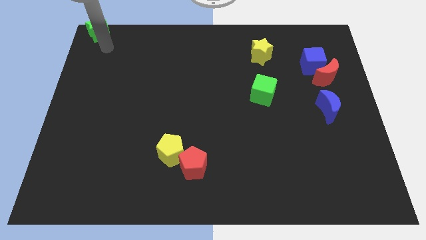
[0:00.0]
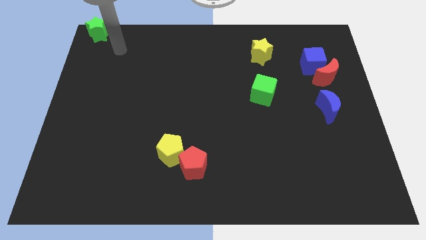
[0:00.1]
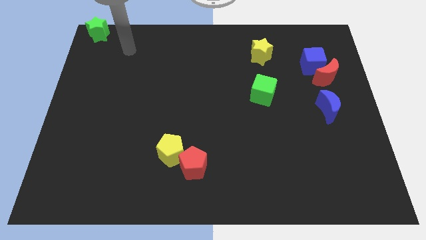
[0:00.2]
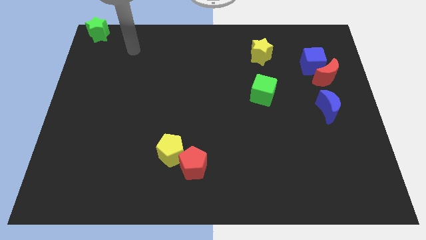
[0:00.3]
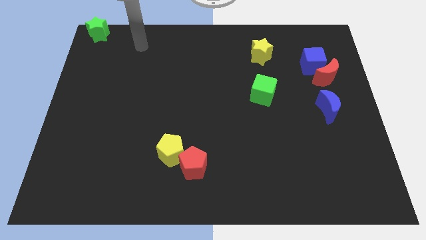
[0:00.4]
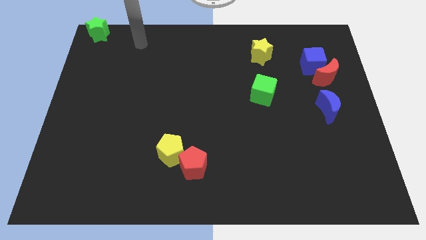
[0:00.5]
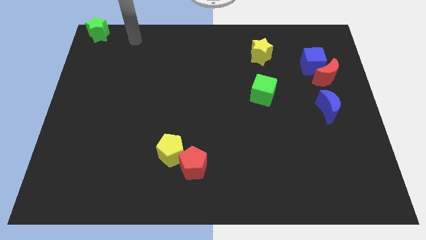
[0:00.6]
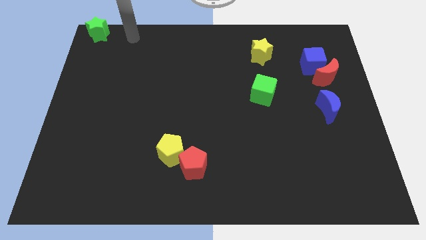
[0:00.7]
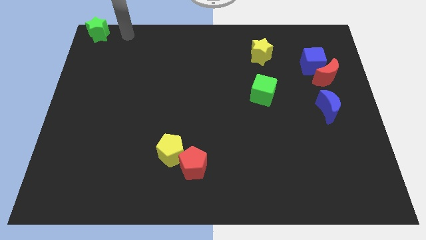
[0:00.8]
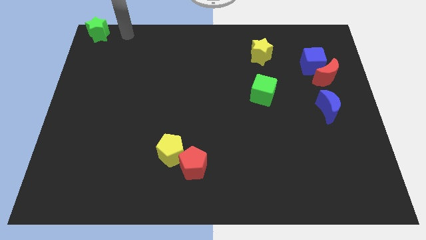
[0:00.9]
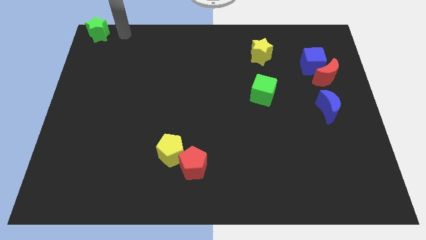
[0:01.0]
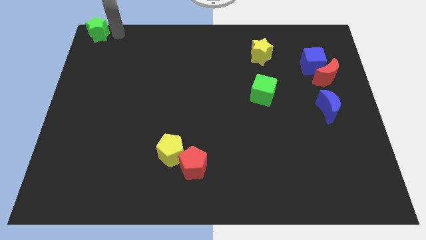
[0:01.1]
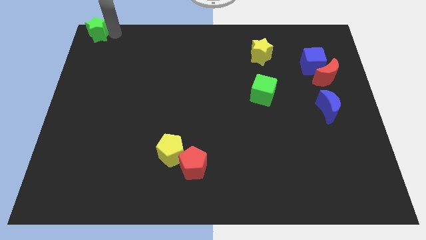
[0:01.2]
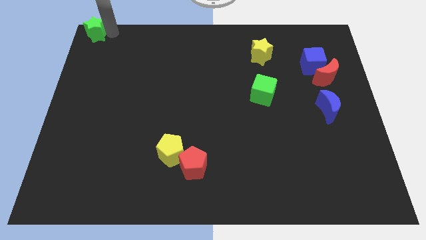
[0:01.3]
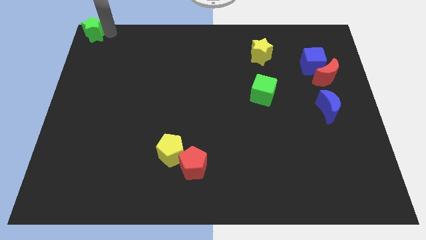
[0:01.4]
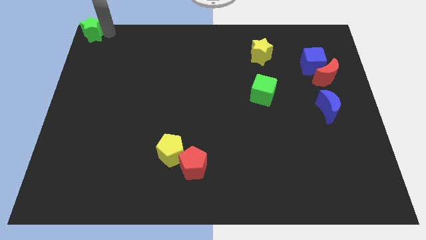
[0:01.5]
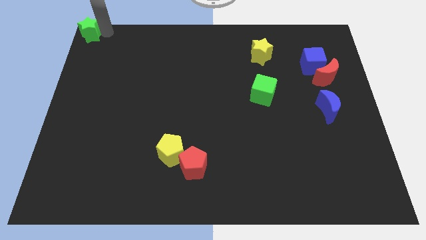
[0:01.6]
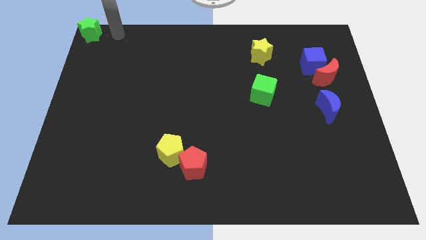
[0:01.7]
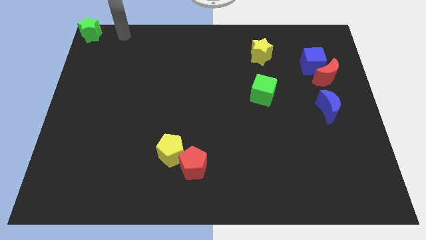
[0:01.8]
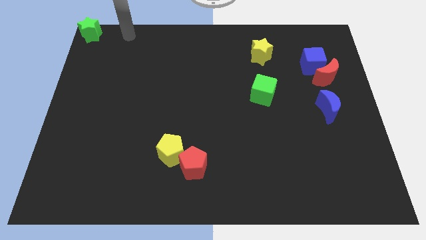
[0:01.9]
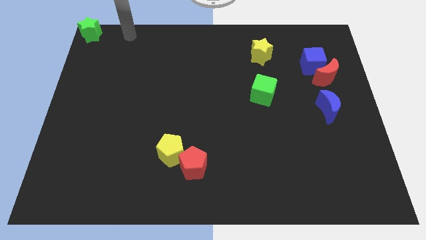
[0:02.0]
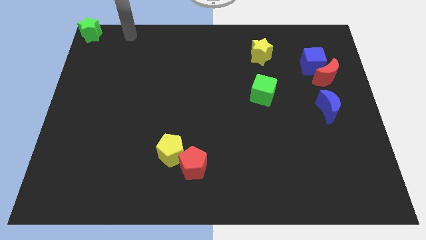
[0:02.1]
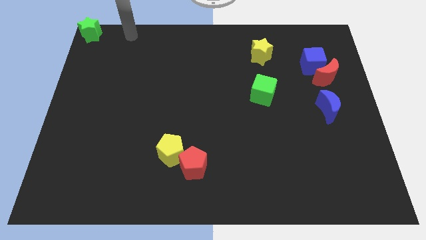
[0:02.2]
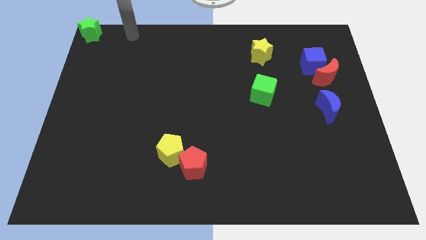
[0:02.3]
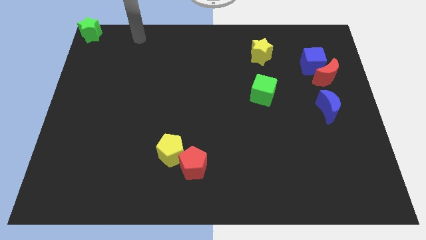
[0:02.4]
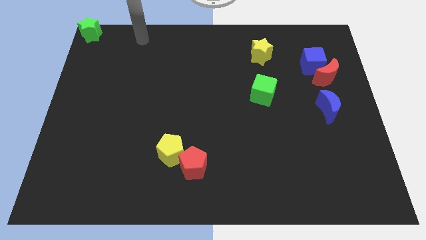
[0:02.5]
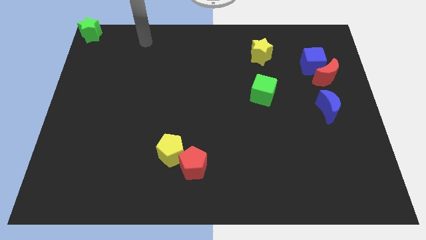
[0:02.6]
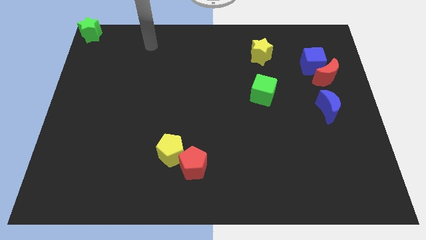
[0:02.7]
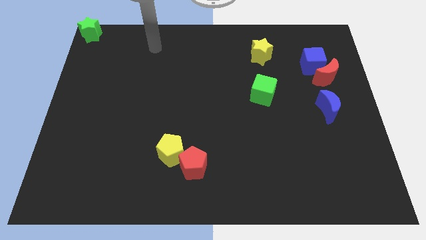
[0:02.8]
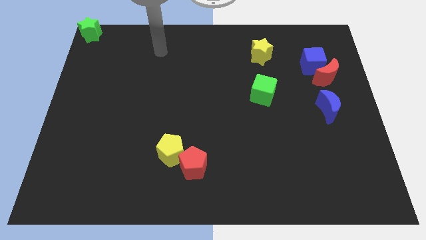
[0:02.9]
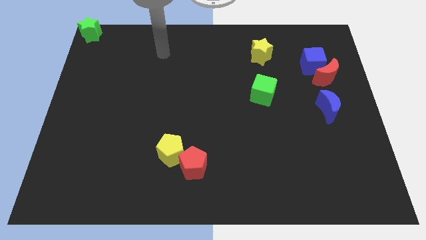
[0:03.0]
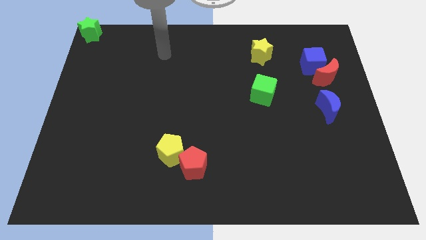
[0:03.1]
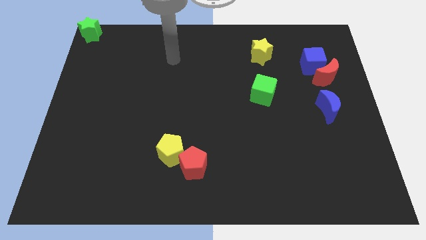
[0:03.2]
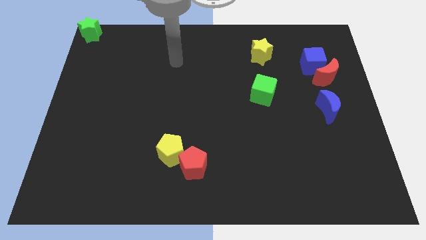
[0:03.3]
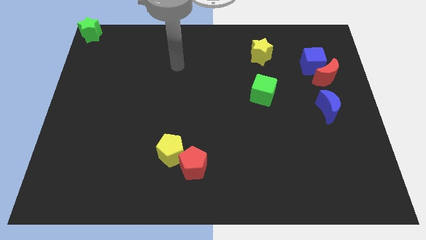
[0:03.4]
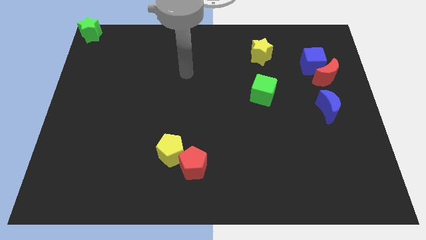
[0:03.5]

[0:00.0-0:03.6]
move your arm towards center of the board

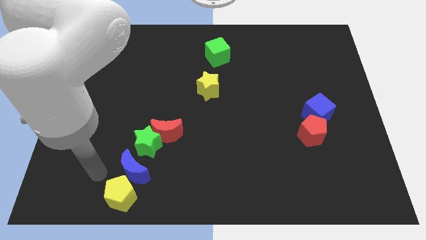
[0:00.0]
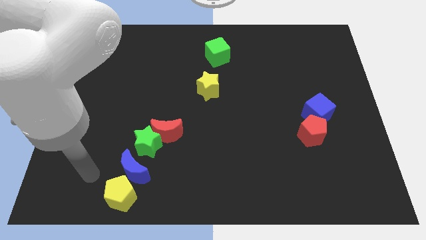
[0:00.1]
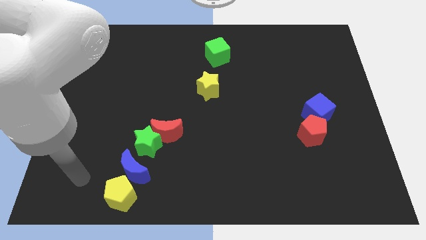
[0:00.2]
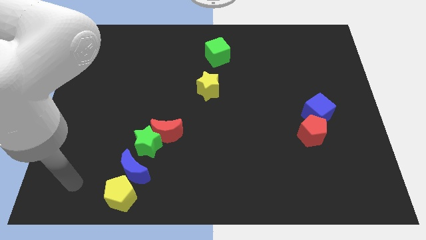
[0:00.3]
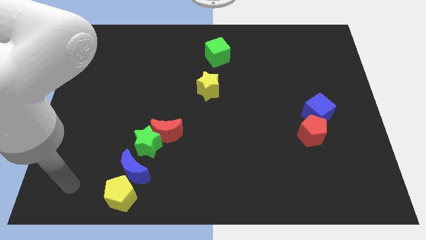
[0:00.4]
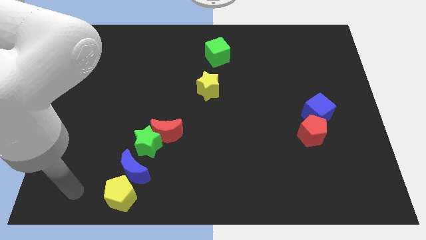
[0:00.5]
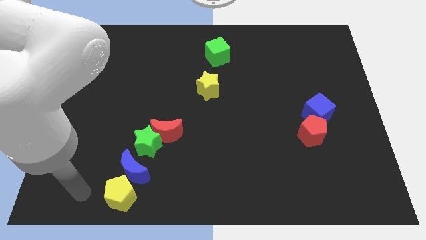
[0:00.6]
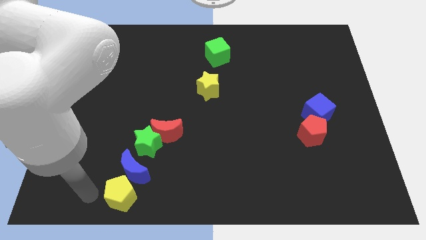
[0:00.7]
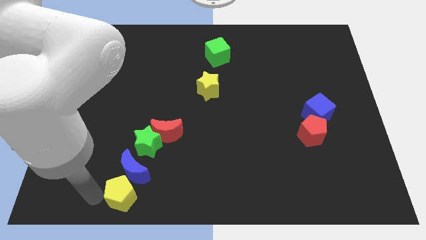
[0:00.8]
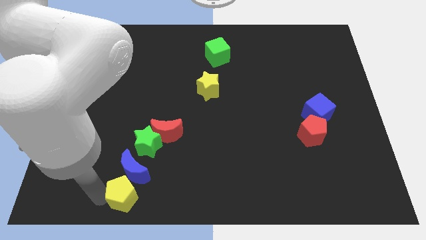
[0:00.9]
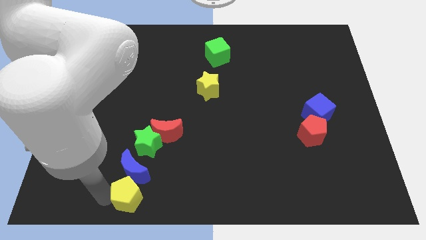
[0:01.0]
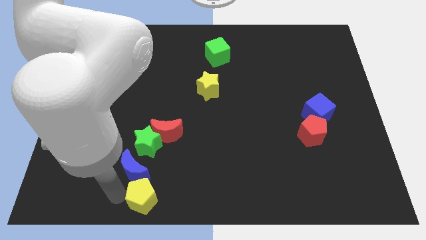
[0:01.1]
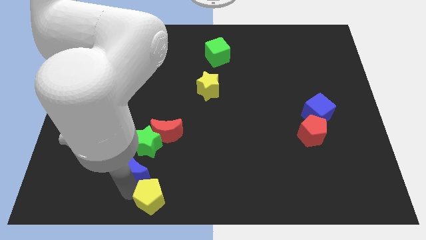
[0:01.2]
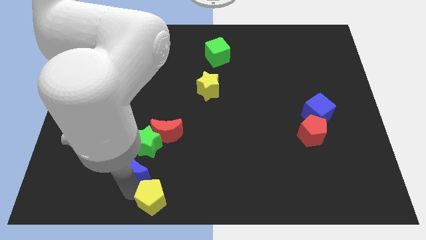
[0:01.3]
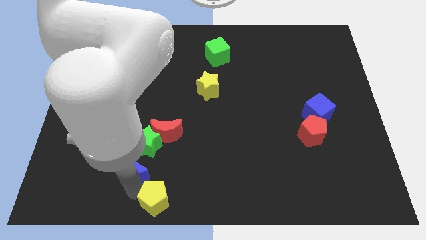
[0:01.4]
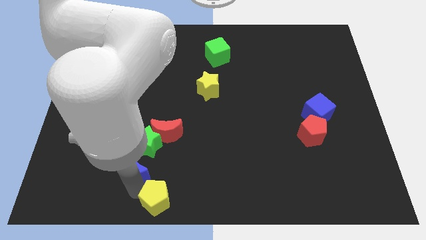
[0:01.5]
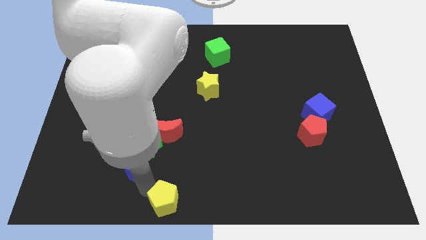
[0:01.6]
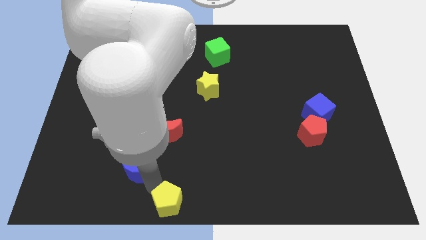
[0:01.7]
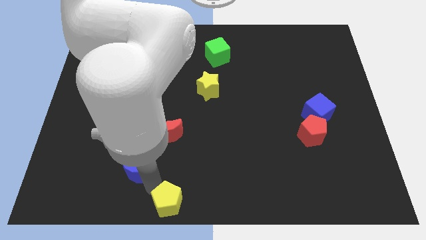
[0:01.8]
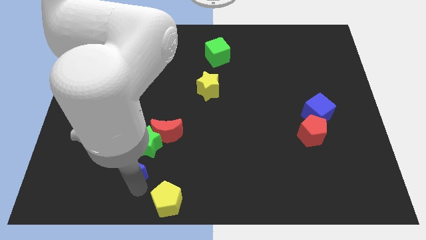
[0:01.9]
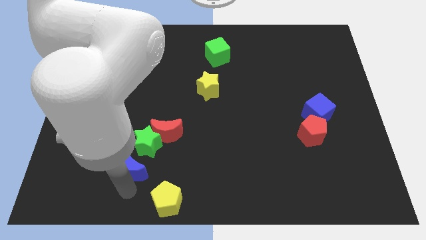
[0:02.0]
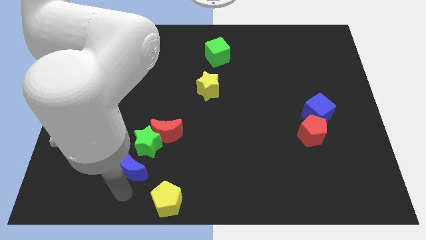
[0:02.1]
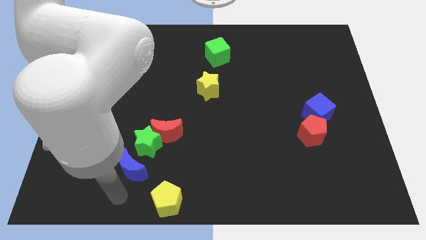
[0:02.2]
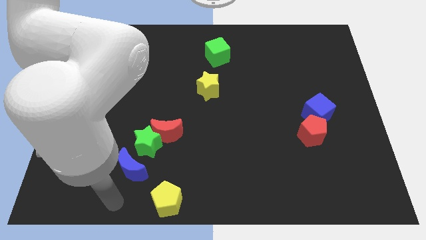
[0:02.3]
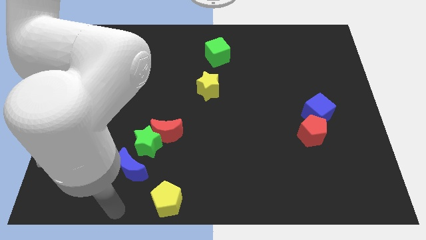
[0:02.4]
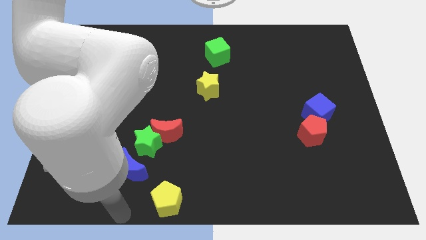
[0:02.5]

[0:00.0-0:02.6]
move the yellow pentagon to the bottom centre of the board

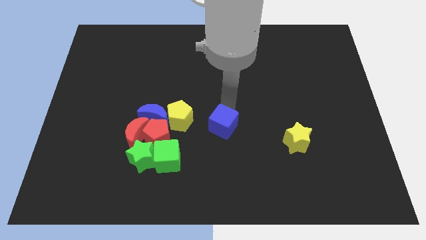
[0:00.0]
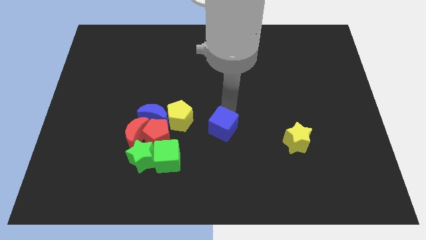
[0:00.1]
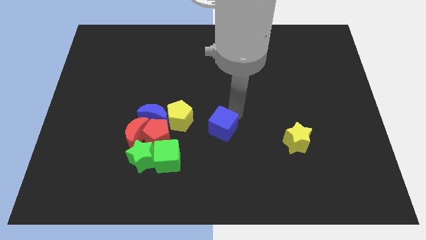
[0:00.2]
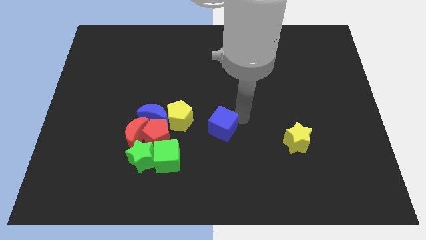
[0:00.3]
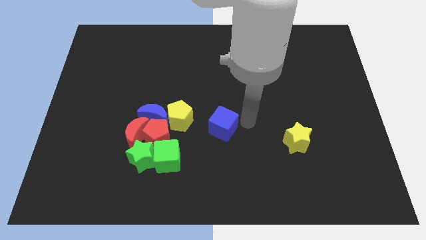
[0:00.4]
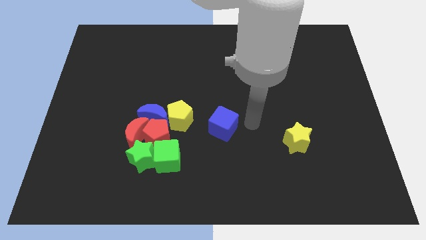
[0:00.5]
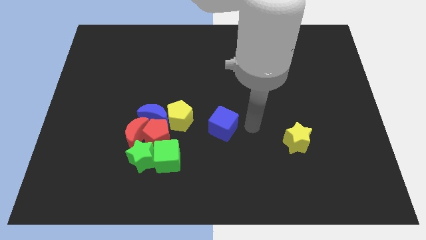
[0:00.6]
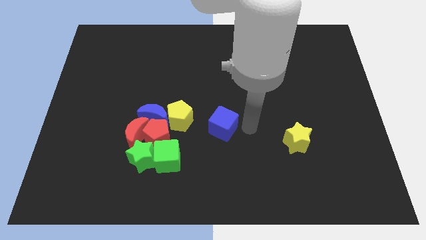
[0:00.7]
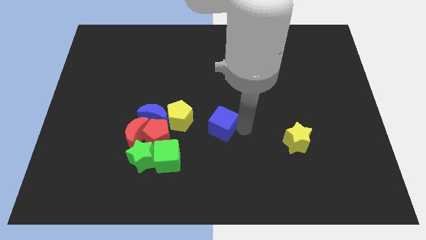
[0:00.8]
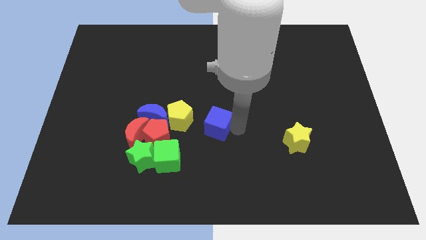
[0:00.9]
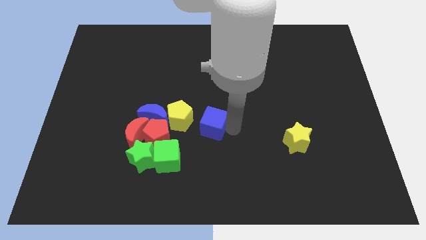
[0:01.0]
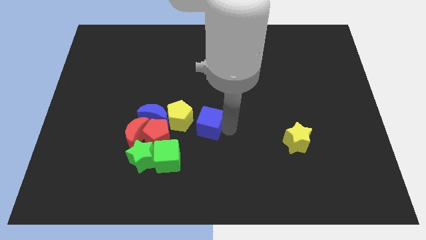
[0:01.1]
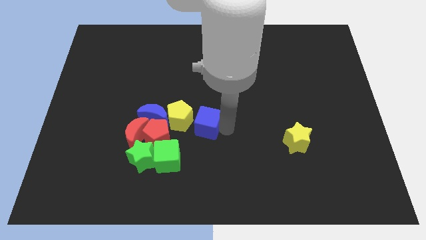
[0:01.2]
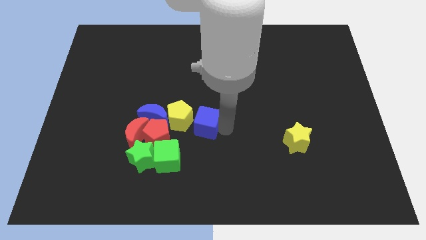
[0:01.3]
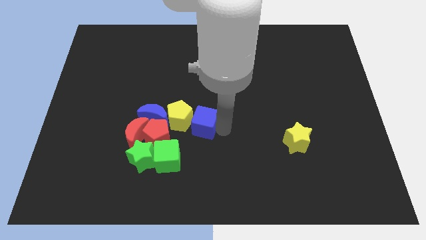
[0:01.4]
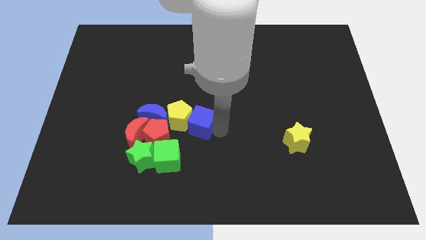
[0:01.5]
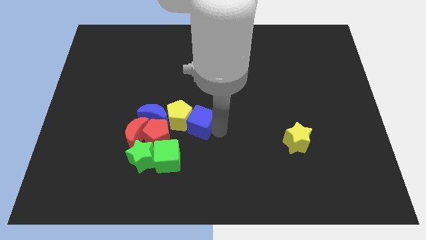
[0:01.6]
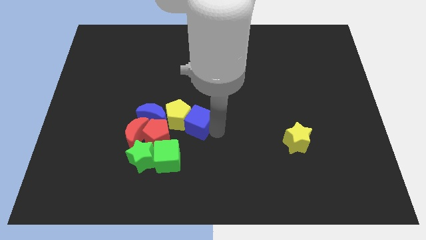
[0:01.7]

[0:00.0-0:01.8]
slide the blue cube close to the yellow pentagon

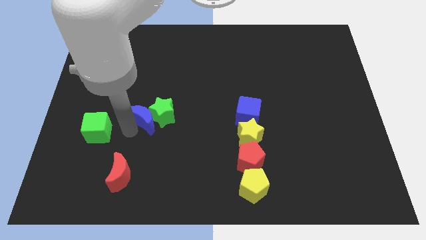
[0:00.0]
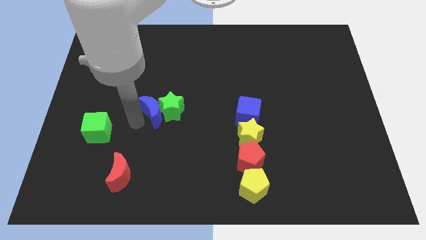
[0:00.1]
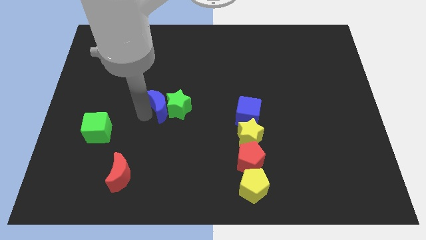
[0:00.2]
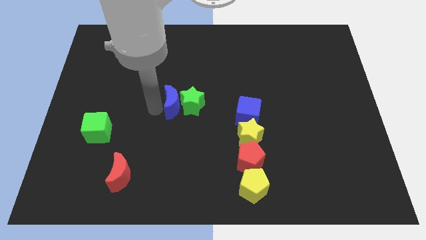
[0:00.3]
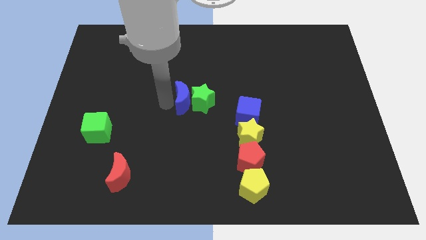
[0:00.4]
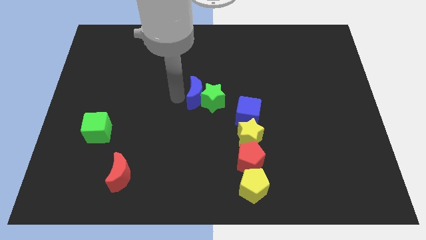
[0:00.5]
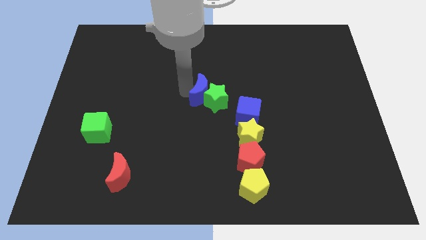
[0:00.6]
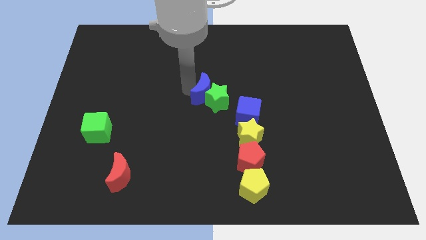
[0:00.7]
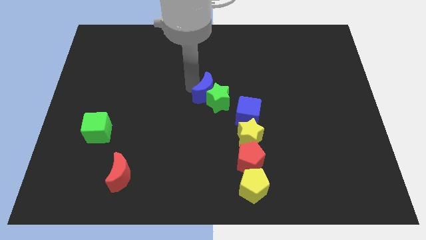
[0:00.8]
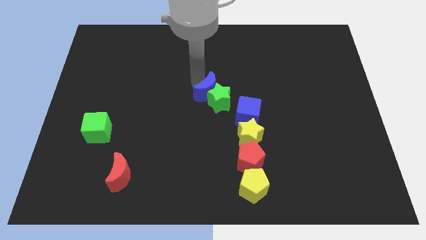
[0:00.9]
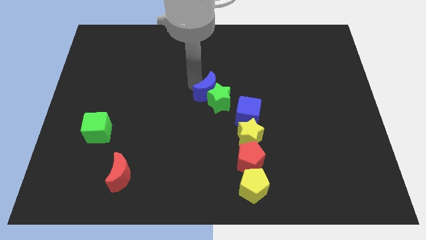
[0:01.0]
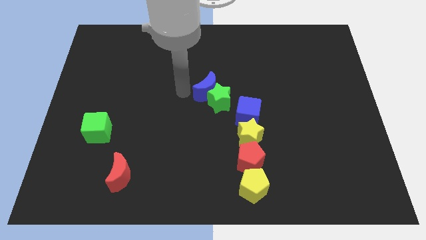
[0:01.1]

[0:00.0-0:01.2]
place the green star and blue moon at the center of the board
